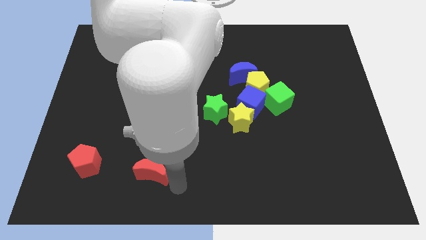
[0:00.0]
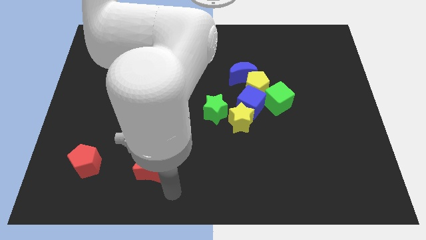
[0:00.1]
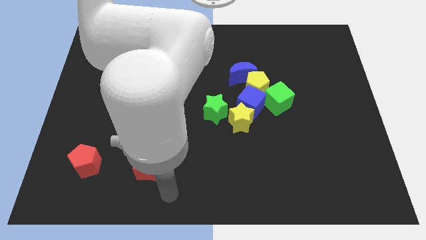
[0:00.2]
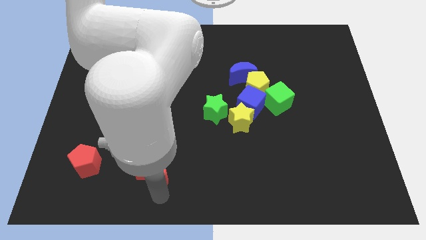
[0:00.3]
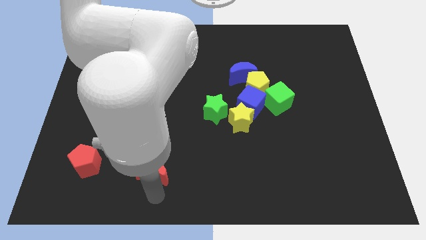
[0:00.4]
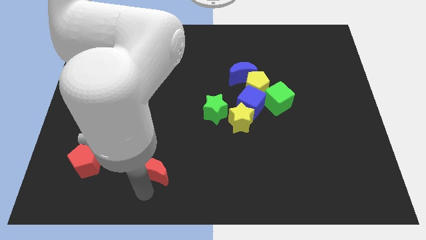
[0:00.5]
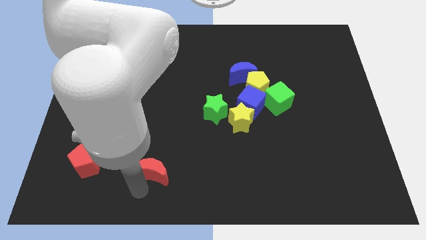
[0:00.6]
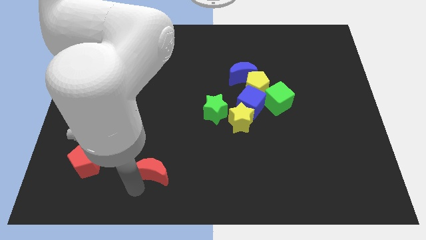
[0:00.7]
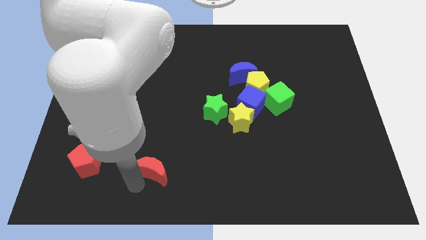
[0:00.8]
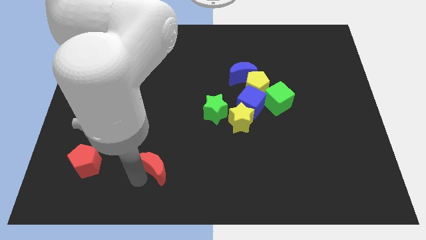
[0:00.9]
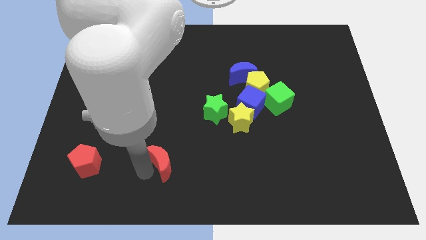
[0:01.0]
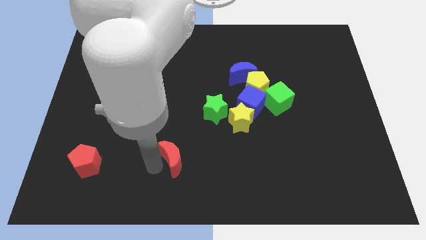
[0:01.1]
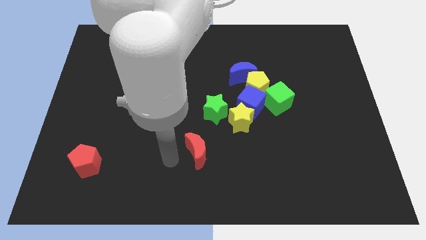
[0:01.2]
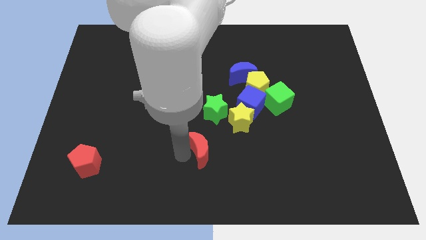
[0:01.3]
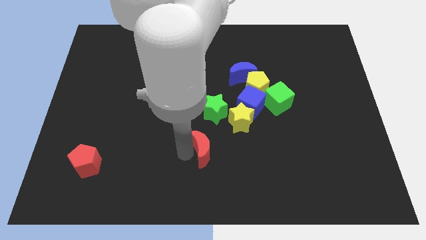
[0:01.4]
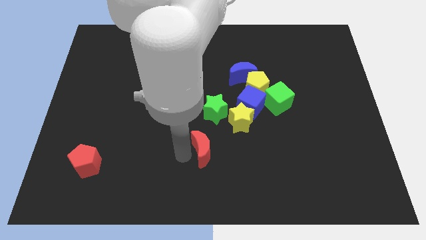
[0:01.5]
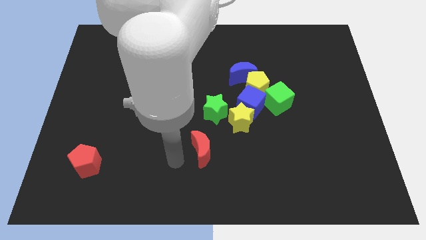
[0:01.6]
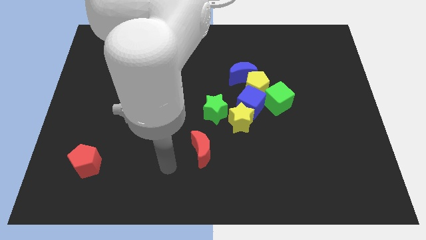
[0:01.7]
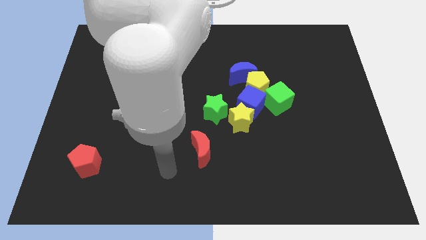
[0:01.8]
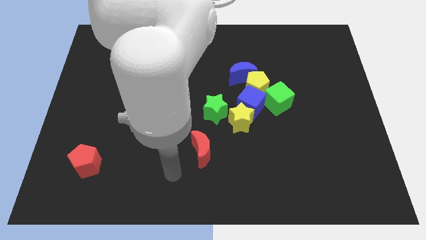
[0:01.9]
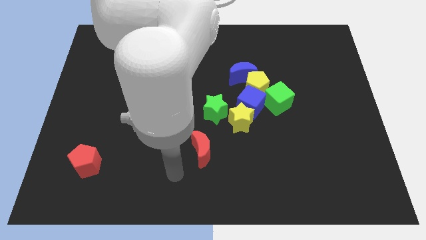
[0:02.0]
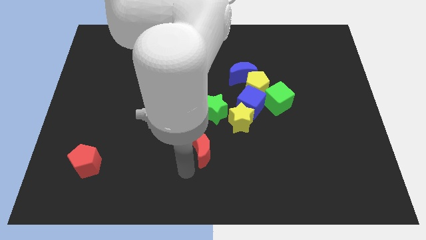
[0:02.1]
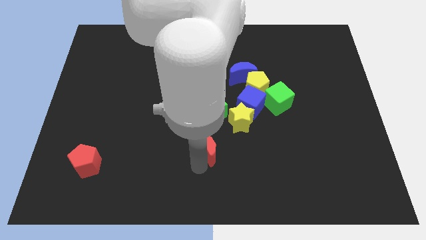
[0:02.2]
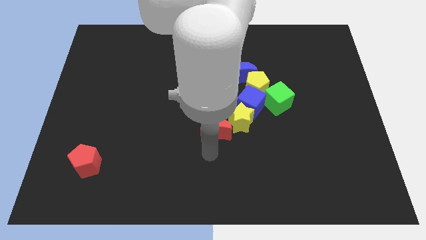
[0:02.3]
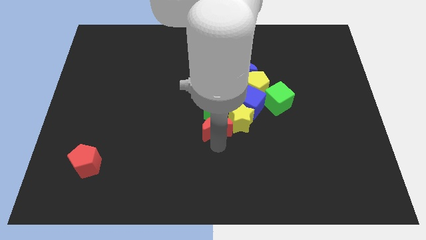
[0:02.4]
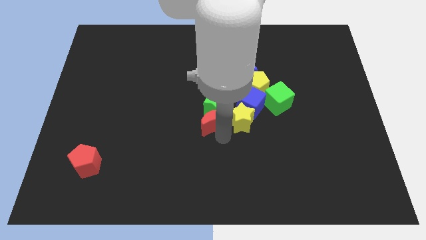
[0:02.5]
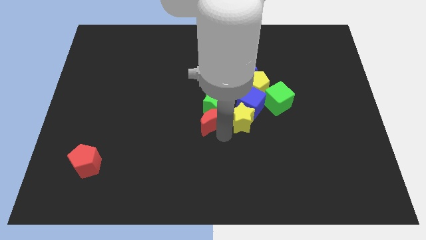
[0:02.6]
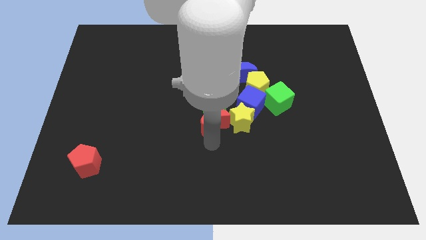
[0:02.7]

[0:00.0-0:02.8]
push the red moon into the green star and yellow star

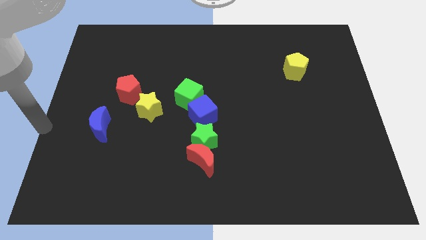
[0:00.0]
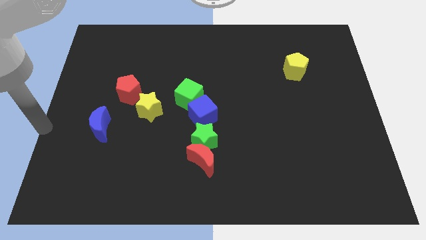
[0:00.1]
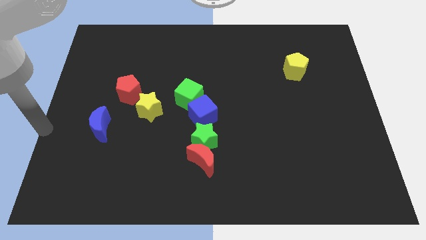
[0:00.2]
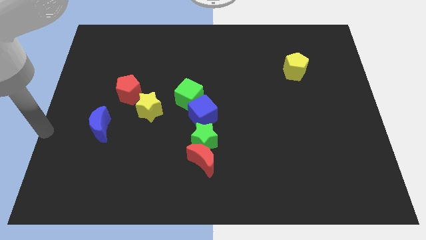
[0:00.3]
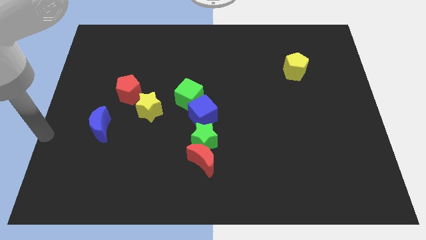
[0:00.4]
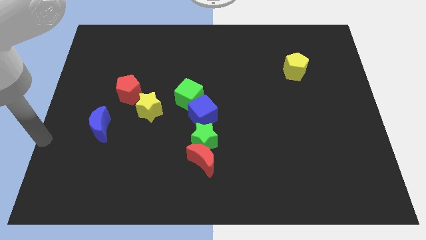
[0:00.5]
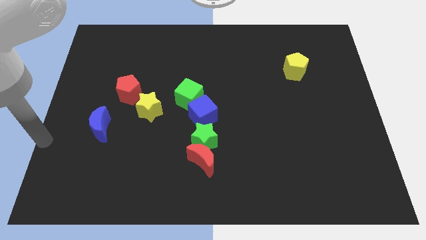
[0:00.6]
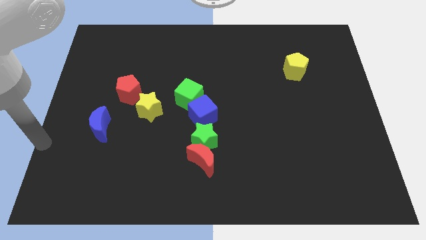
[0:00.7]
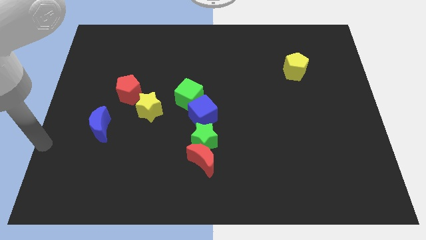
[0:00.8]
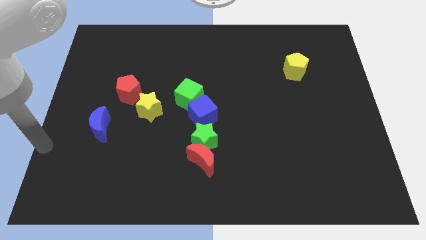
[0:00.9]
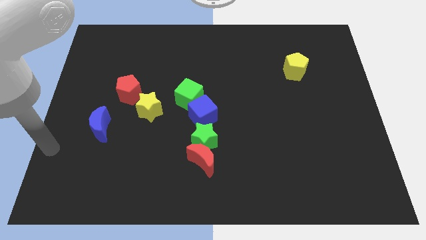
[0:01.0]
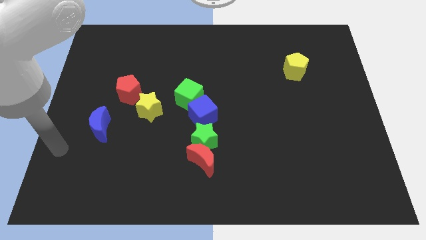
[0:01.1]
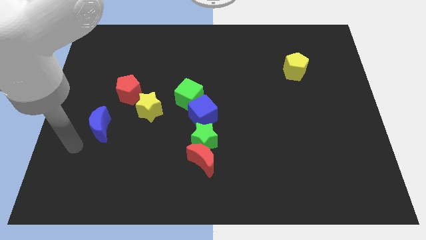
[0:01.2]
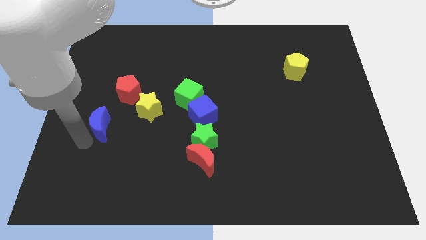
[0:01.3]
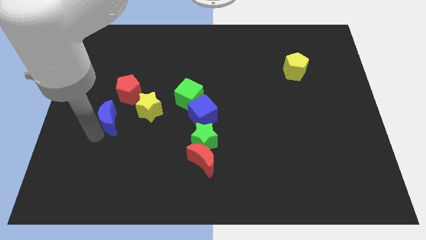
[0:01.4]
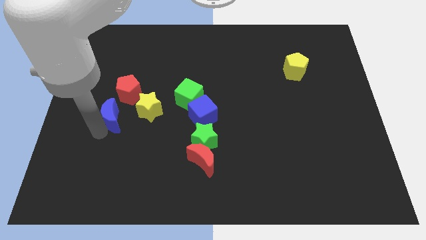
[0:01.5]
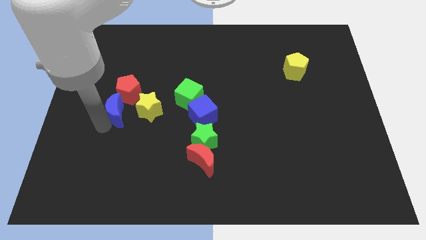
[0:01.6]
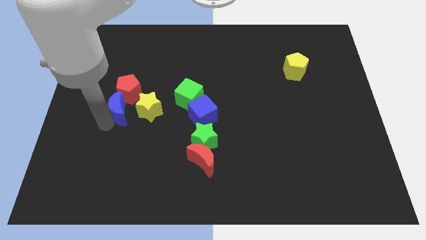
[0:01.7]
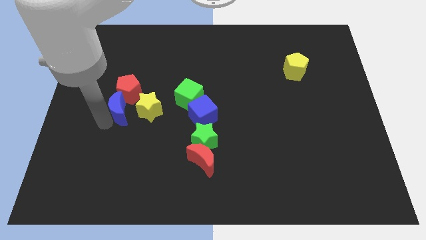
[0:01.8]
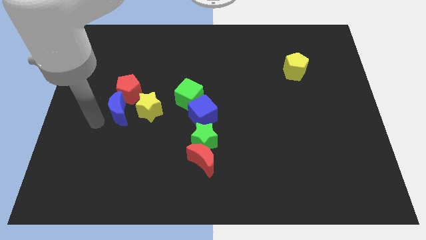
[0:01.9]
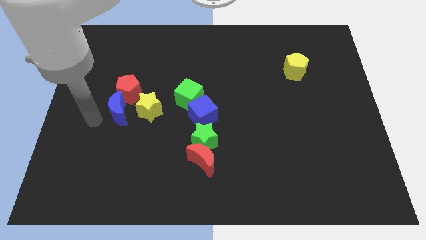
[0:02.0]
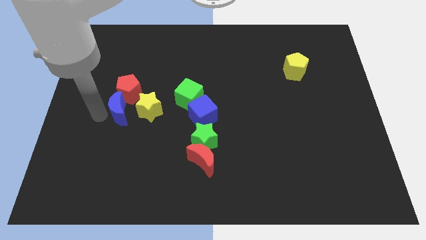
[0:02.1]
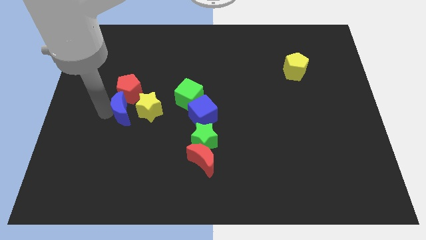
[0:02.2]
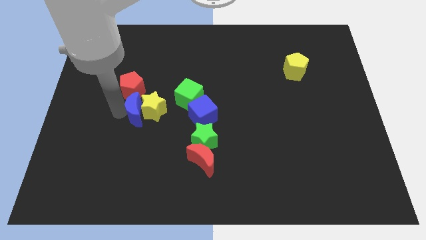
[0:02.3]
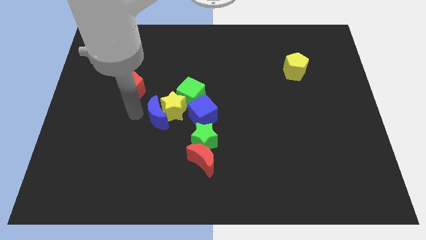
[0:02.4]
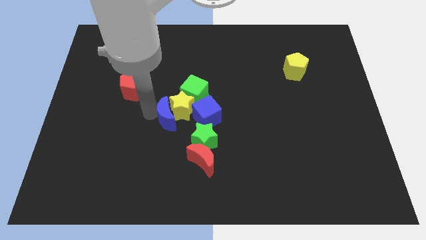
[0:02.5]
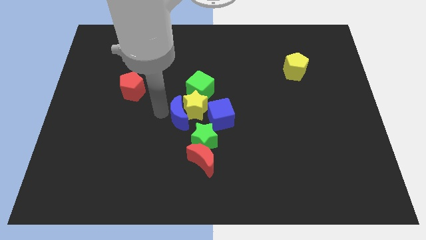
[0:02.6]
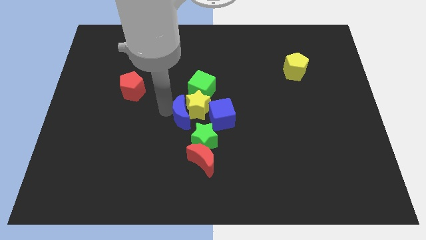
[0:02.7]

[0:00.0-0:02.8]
push the blue moon into the group of blocks

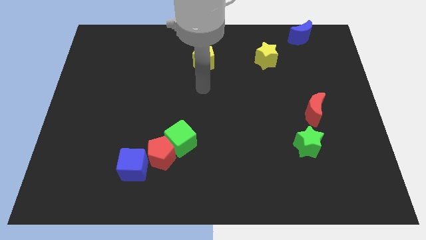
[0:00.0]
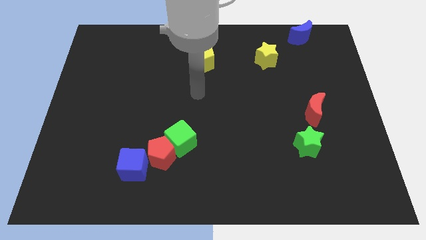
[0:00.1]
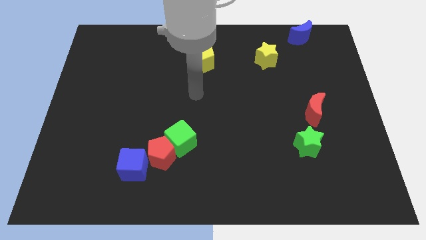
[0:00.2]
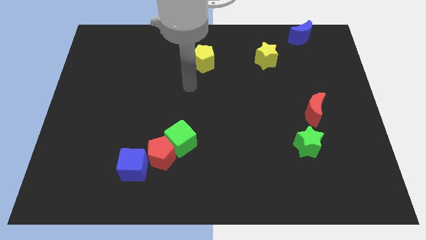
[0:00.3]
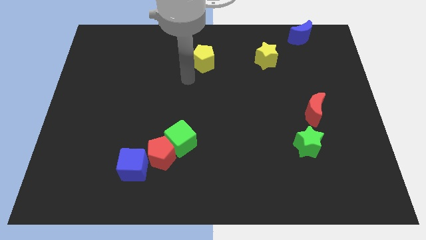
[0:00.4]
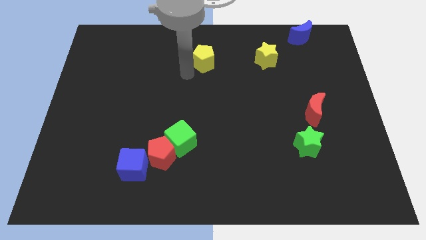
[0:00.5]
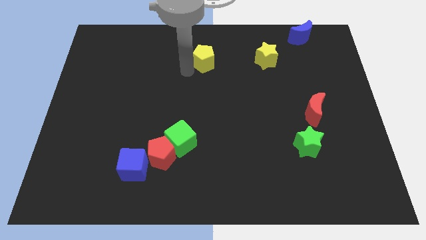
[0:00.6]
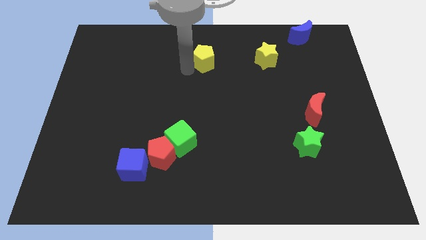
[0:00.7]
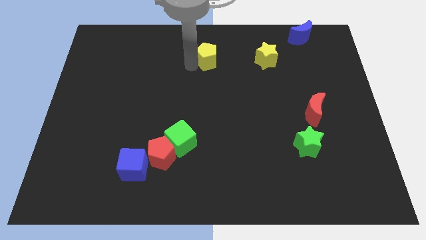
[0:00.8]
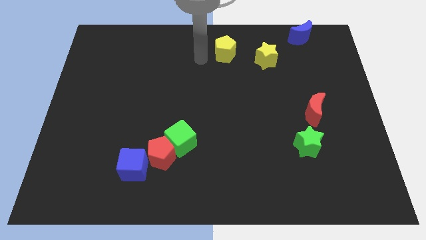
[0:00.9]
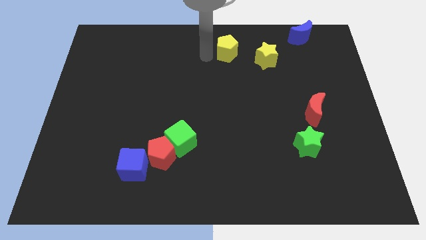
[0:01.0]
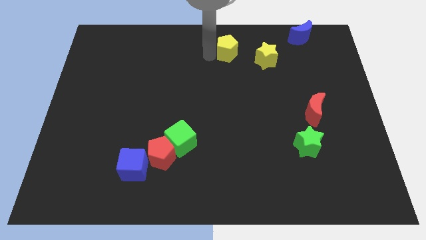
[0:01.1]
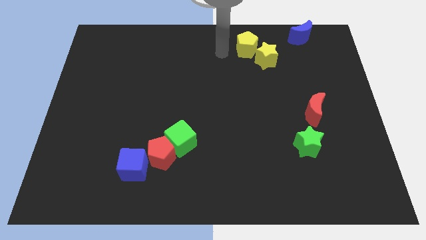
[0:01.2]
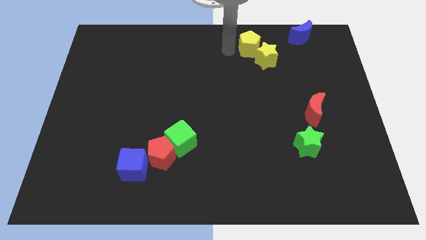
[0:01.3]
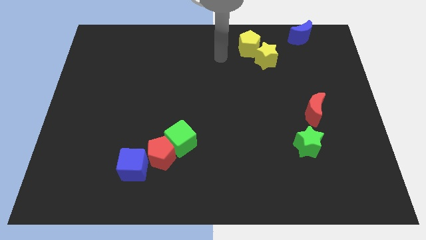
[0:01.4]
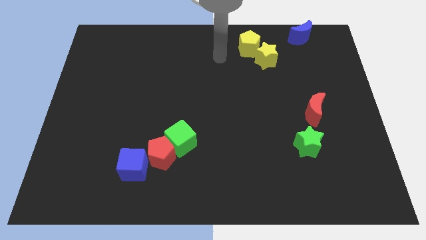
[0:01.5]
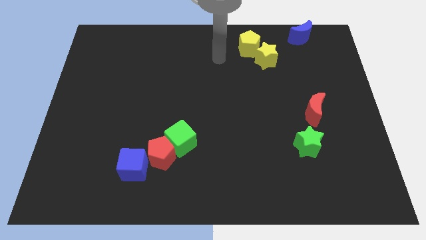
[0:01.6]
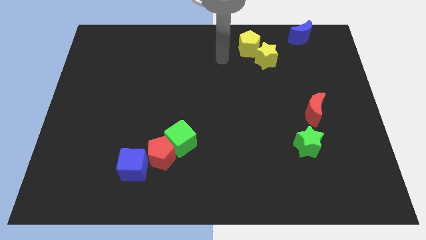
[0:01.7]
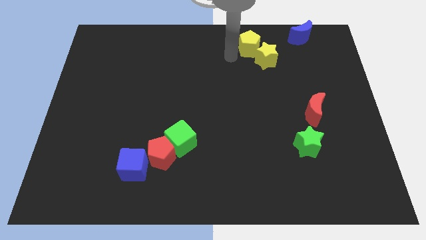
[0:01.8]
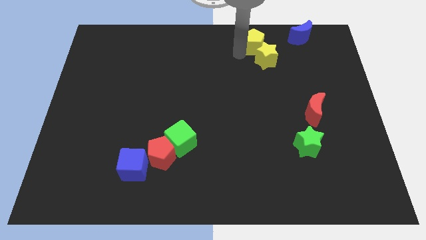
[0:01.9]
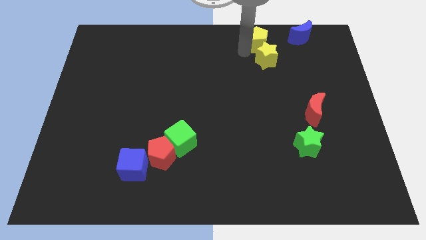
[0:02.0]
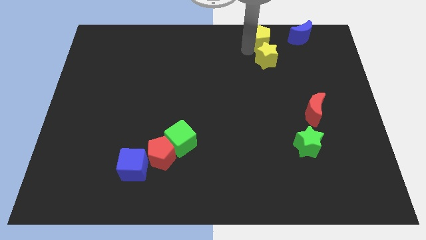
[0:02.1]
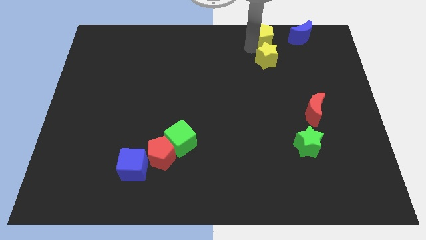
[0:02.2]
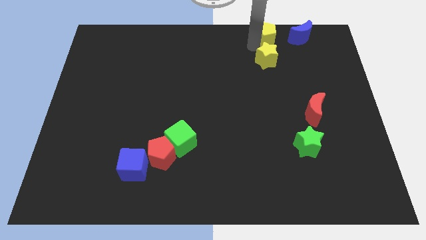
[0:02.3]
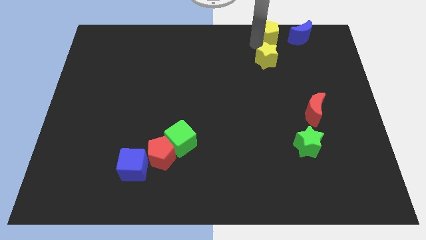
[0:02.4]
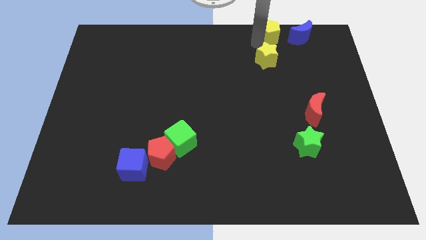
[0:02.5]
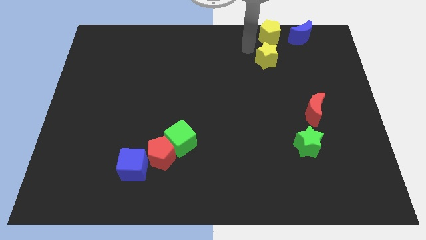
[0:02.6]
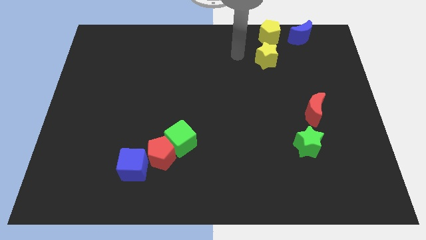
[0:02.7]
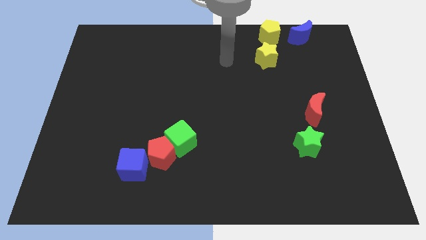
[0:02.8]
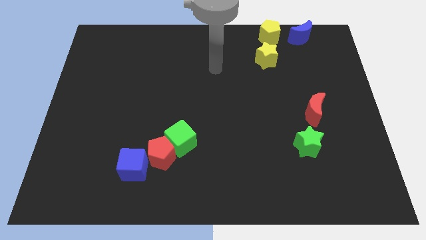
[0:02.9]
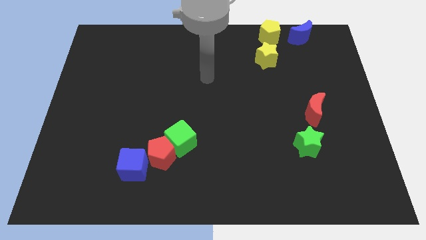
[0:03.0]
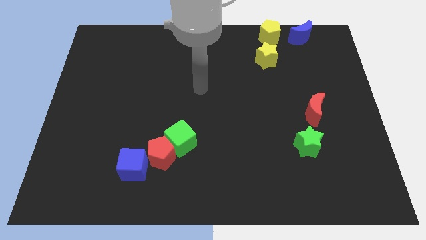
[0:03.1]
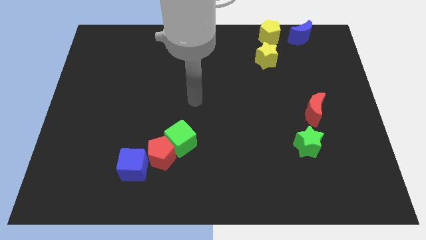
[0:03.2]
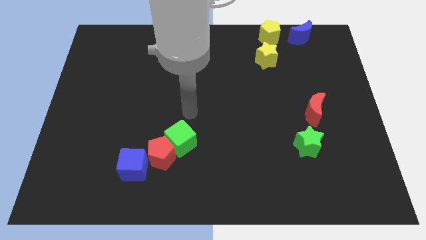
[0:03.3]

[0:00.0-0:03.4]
drag the yellow pentagon above the yellow star
